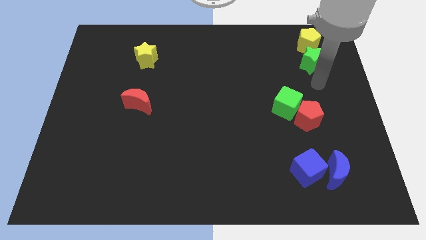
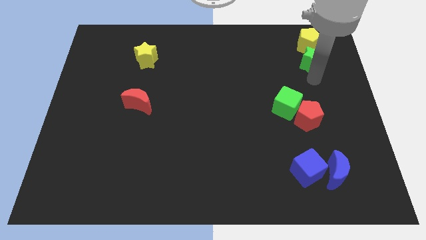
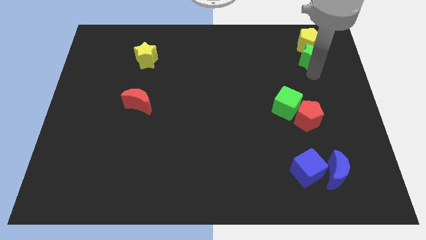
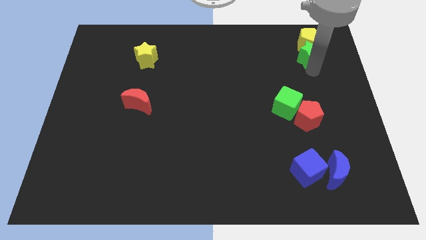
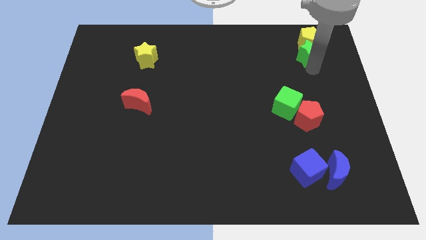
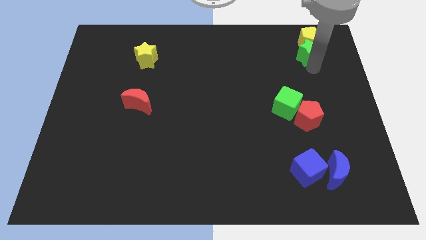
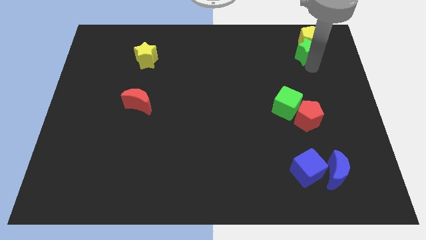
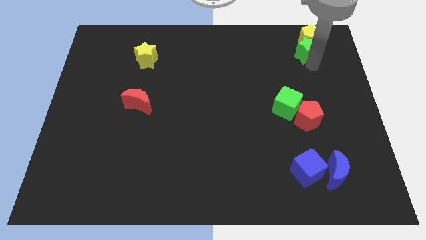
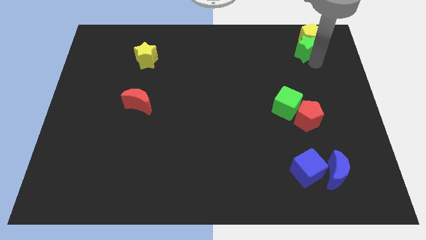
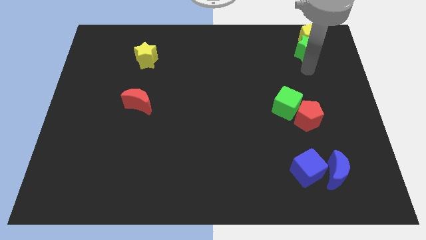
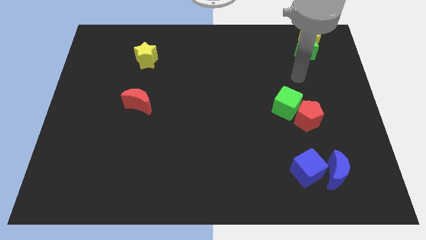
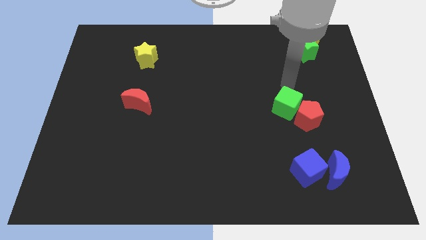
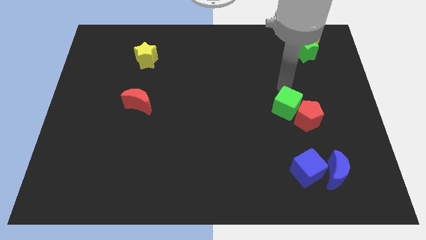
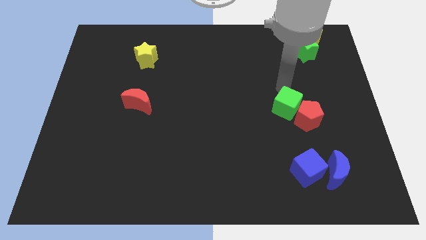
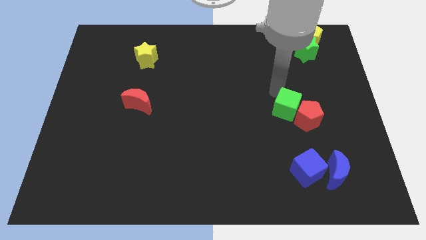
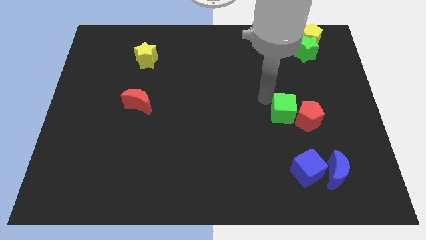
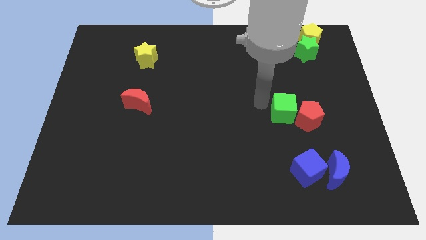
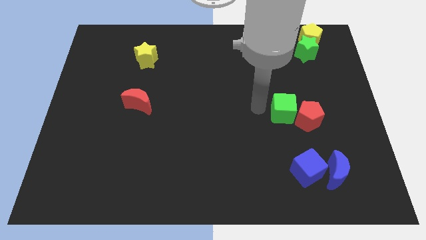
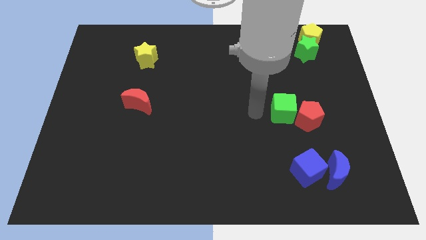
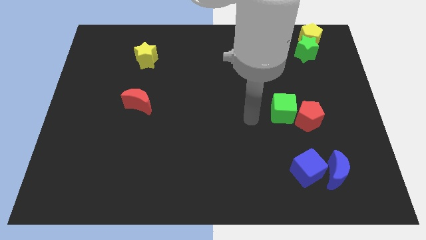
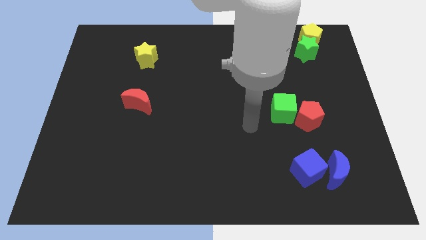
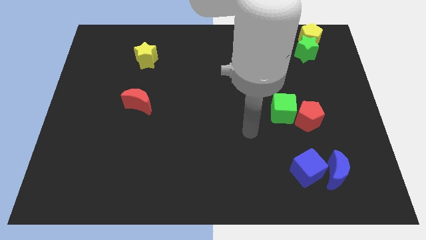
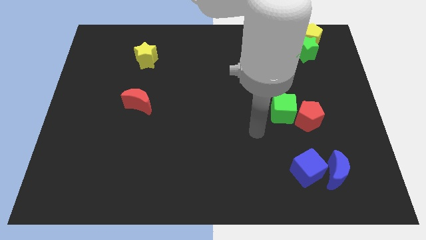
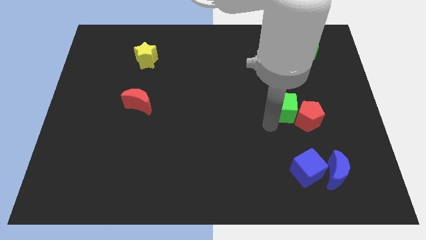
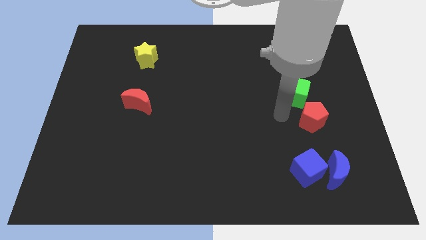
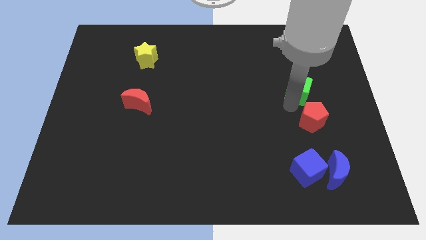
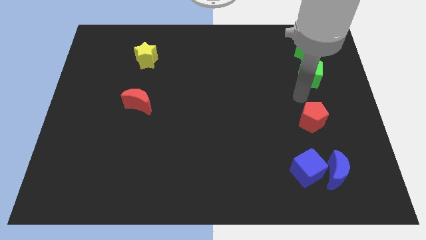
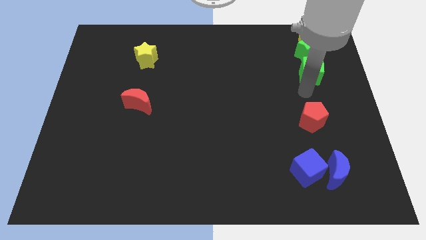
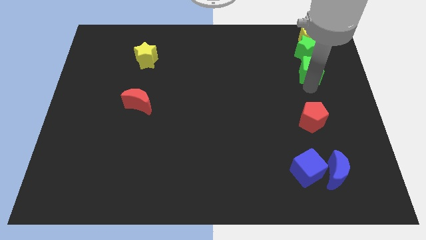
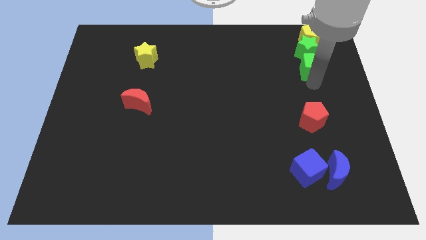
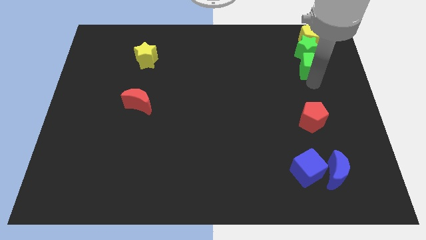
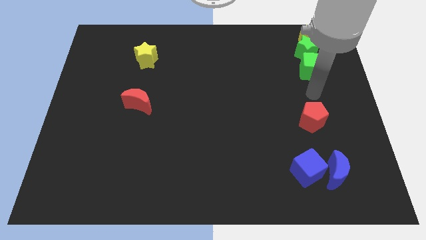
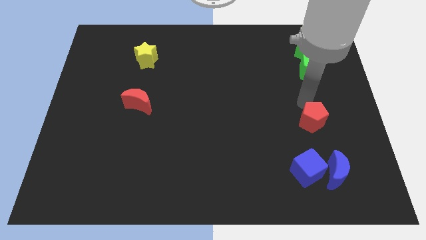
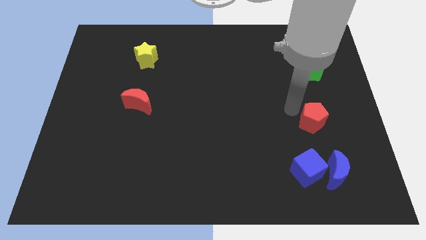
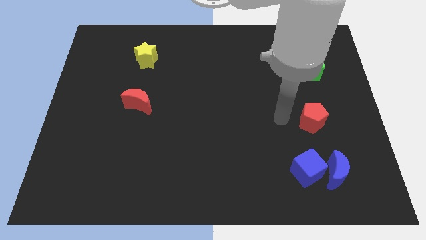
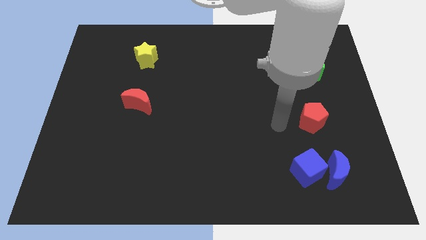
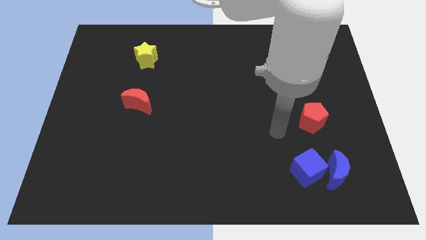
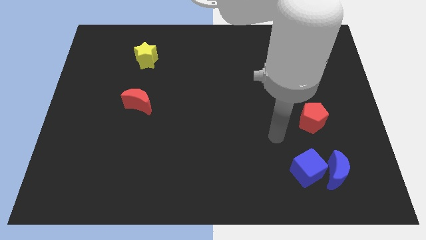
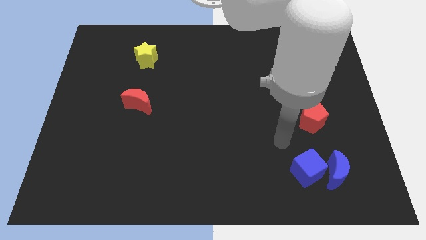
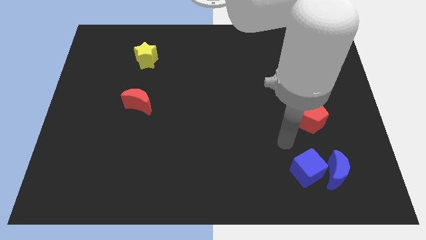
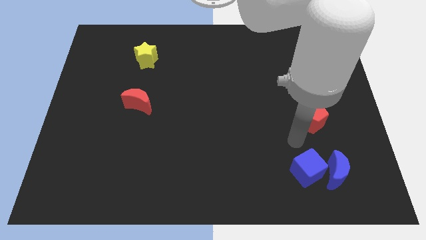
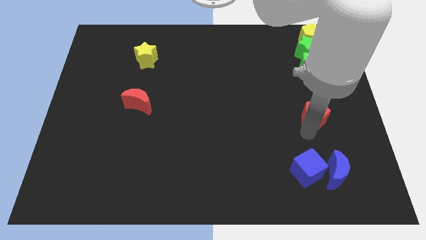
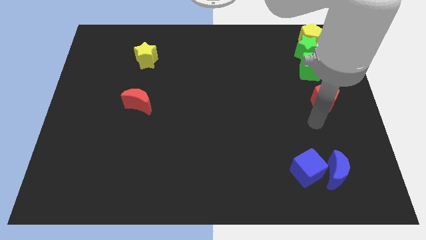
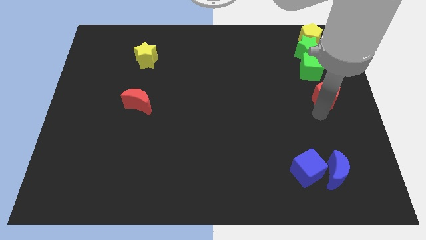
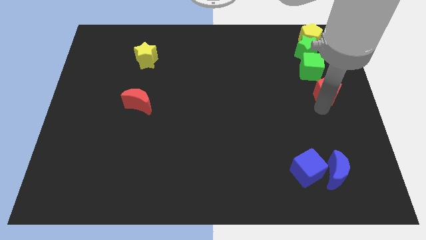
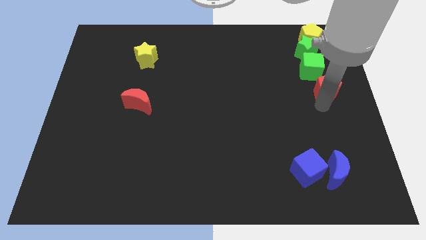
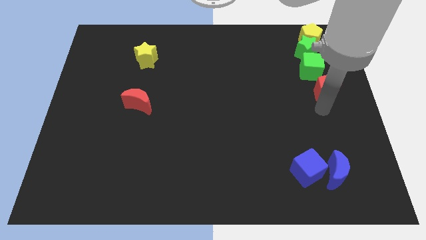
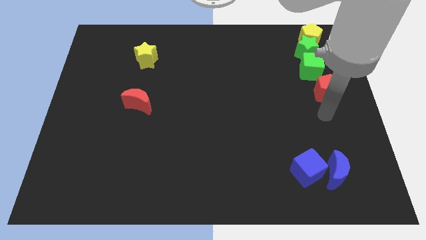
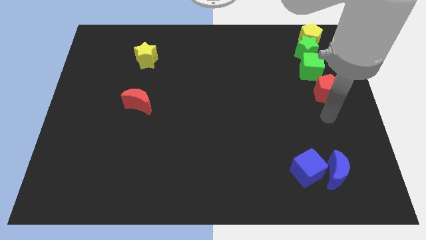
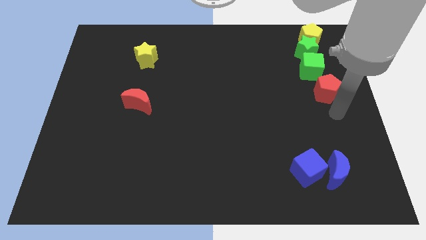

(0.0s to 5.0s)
push the green cube into the green star

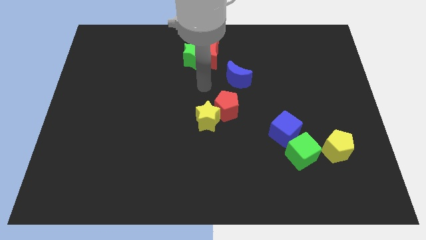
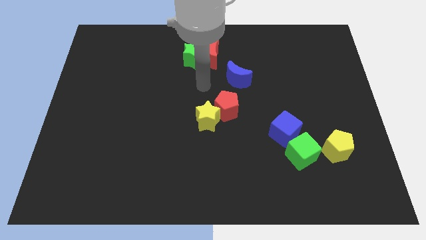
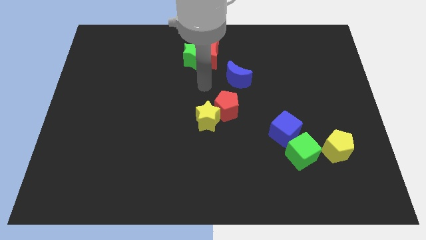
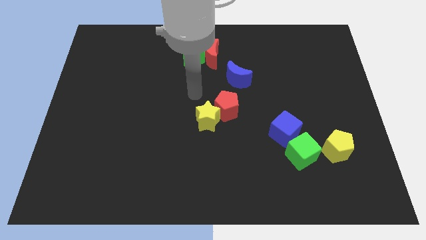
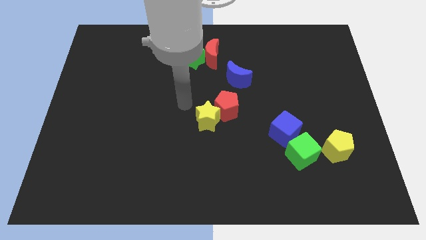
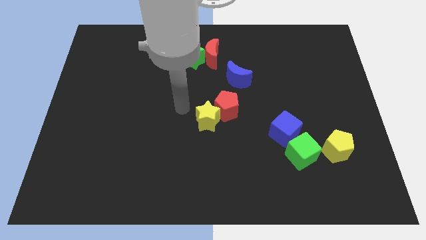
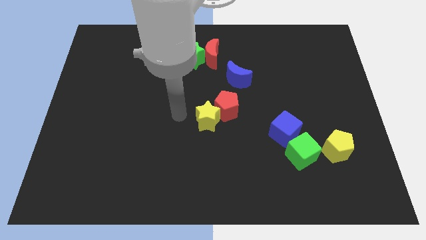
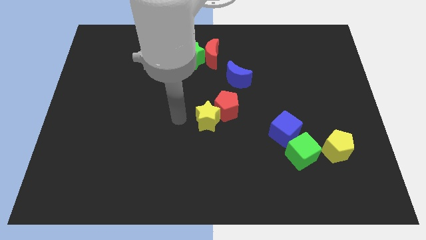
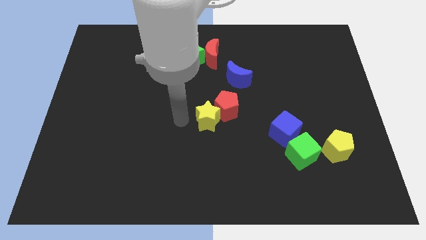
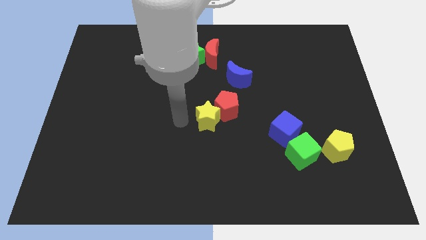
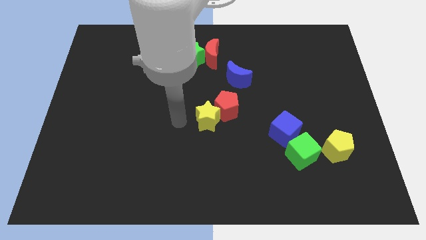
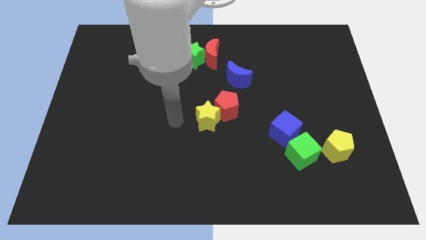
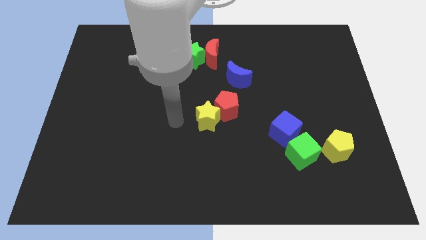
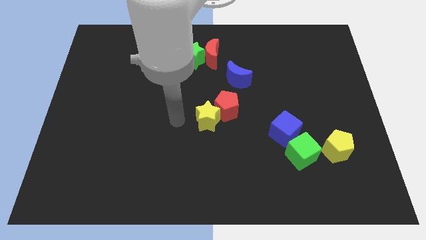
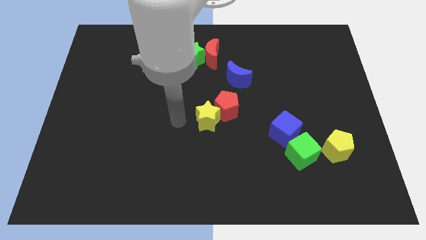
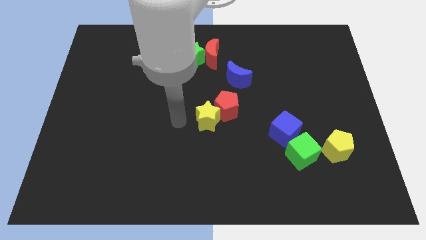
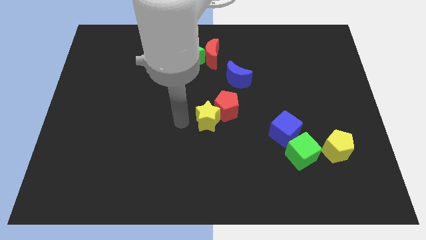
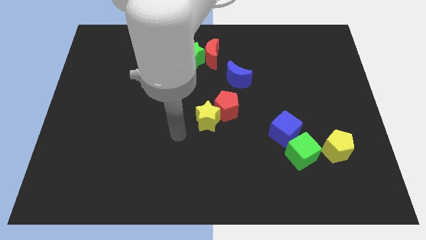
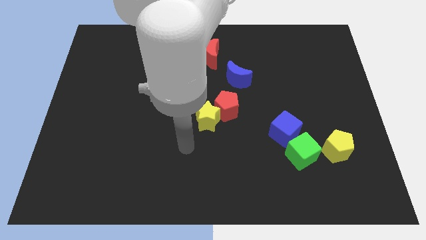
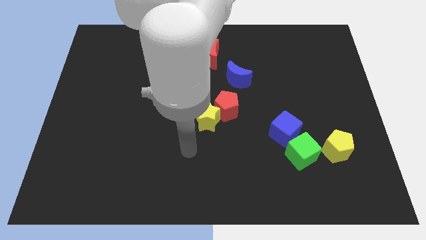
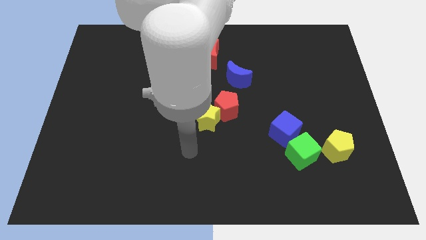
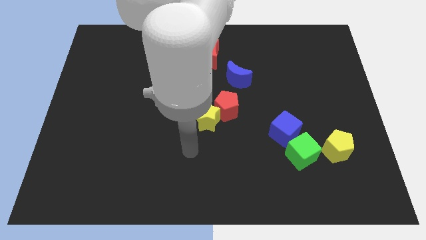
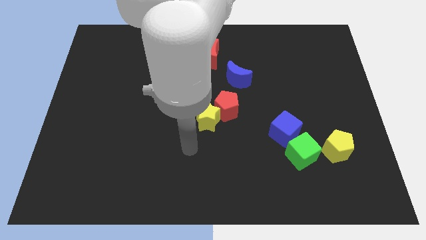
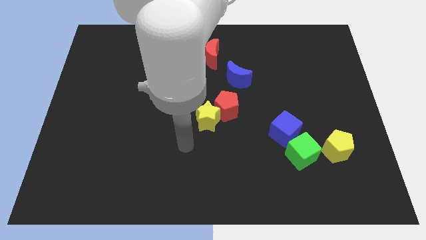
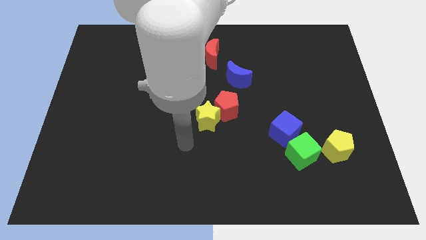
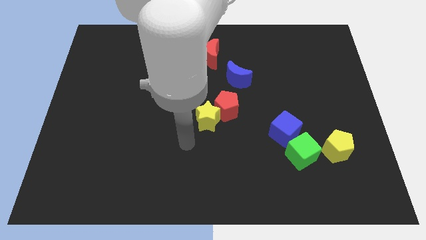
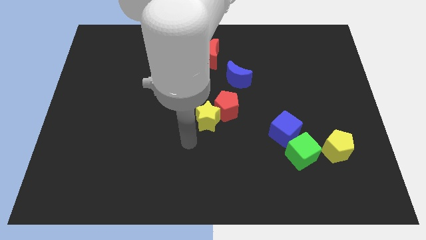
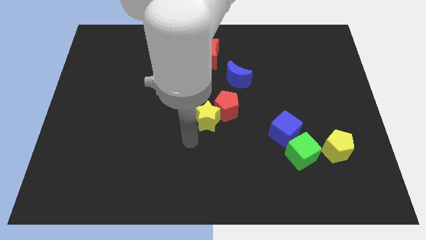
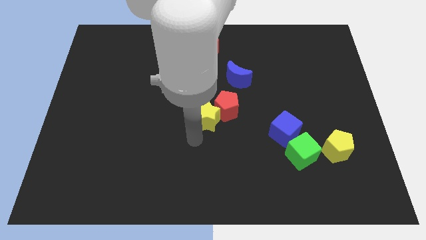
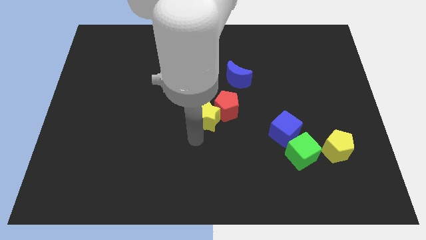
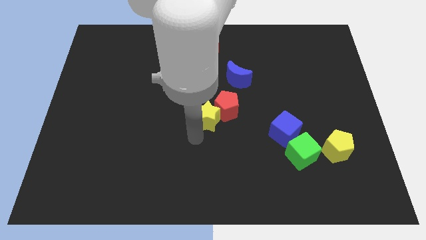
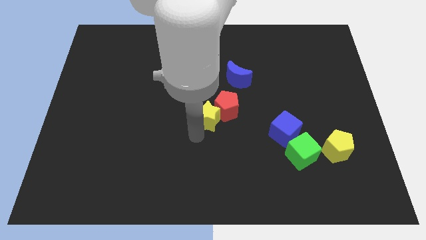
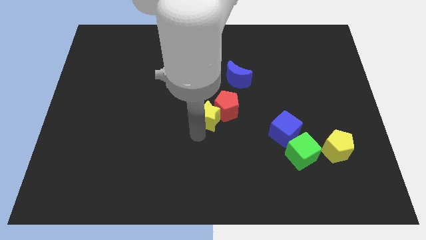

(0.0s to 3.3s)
place arm down to the yellow star

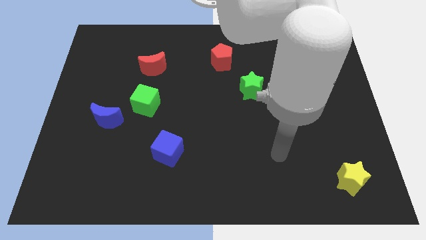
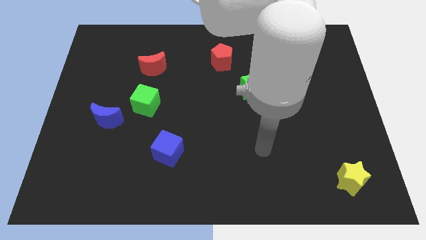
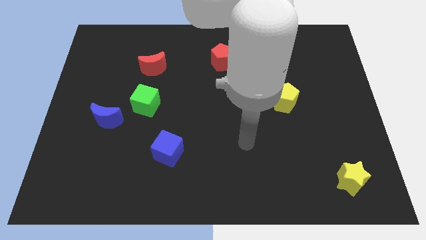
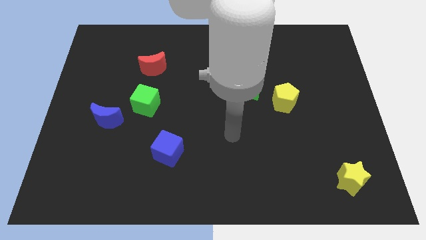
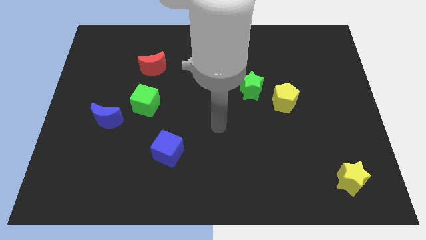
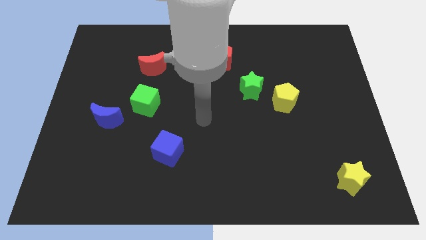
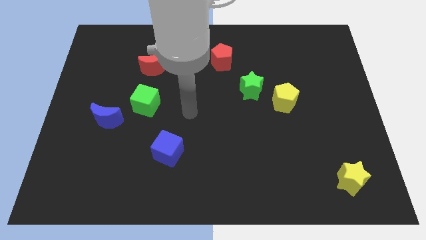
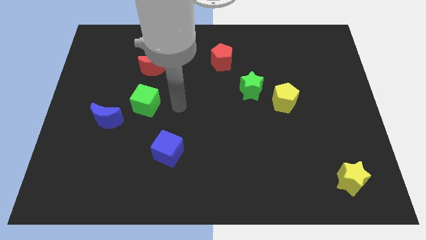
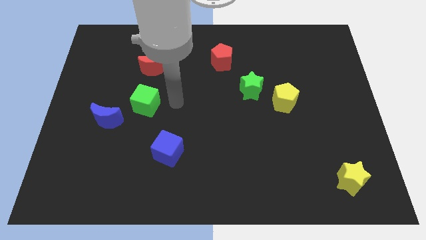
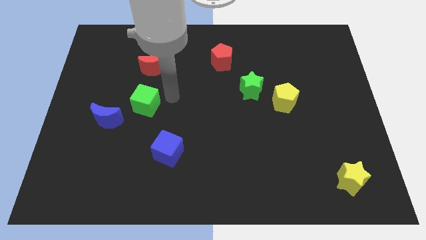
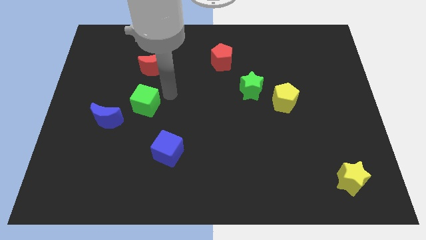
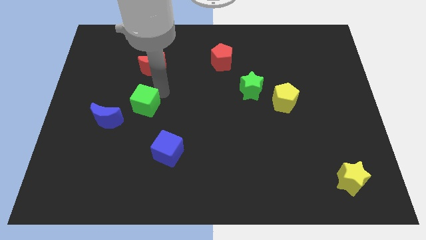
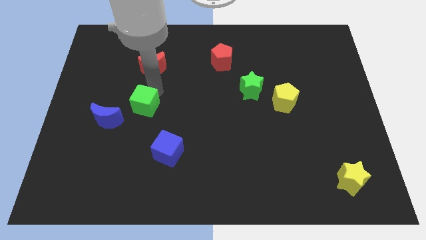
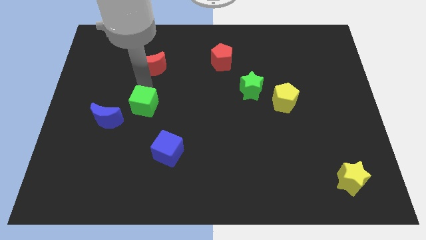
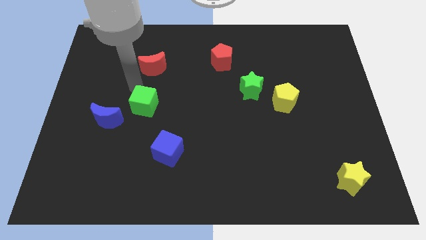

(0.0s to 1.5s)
move arm near green cube
